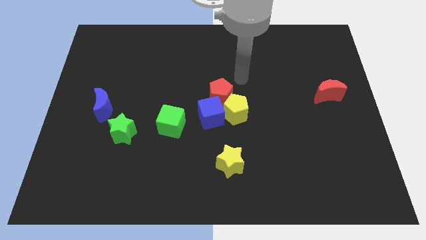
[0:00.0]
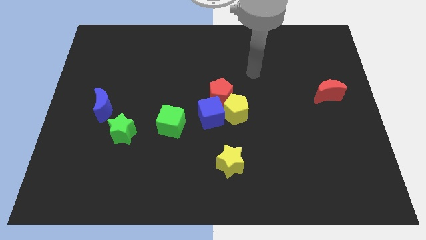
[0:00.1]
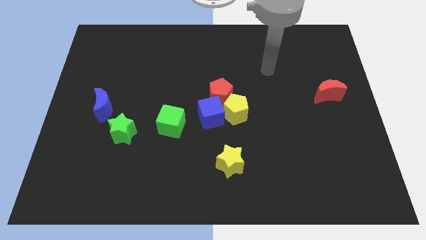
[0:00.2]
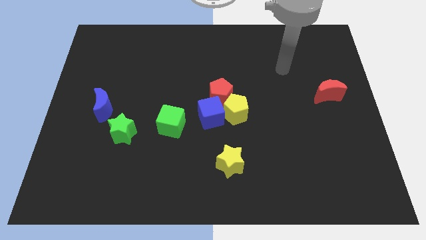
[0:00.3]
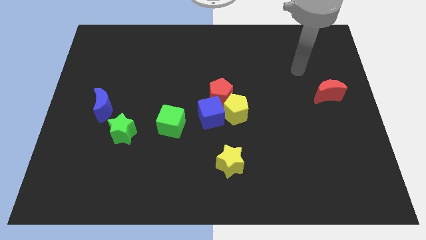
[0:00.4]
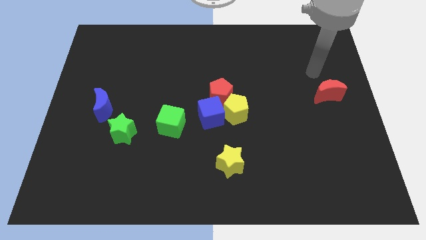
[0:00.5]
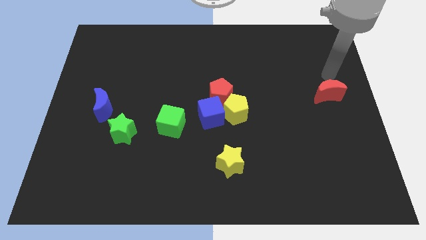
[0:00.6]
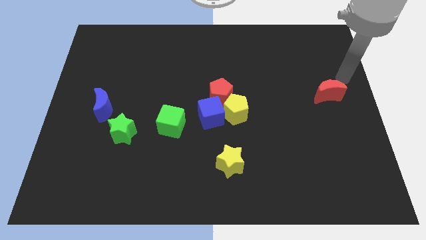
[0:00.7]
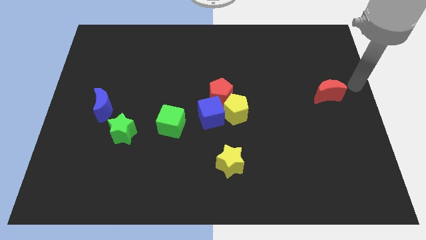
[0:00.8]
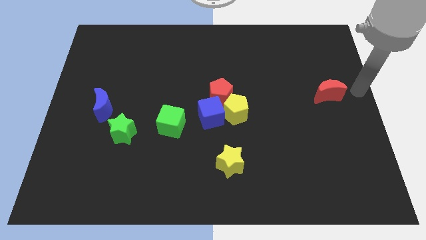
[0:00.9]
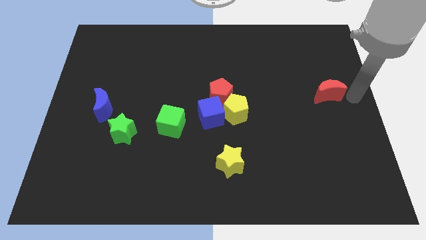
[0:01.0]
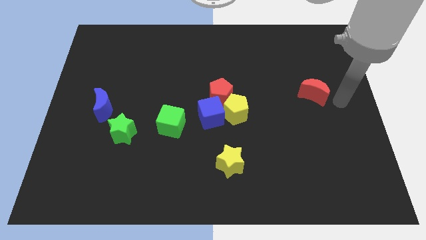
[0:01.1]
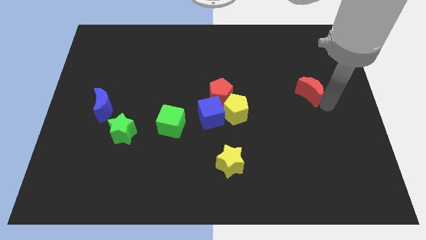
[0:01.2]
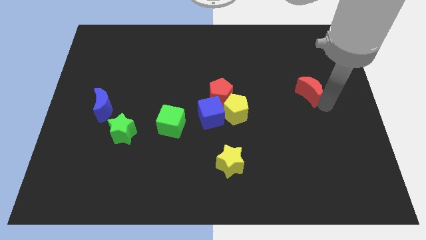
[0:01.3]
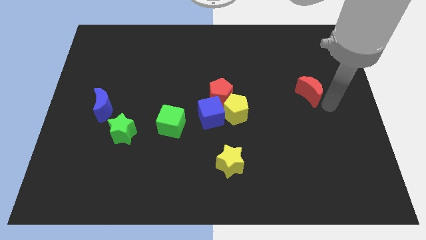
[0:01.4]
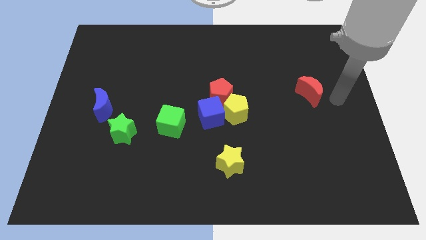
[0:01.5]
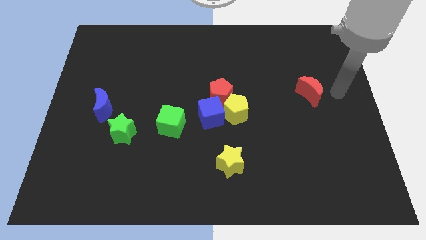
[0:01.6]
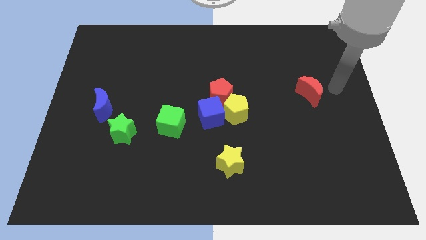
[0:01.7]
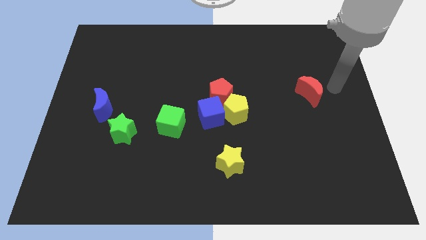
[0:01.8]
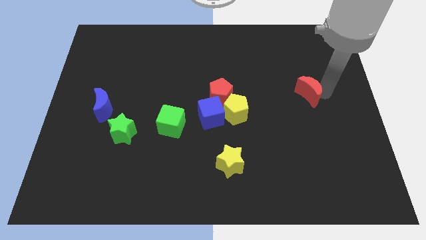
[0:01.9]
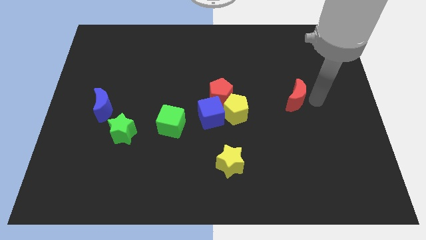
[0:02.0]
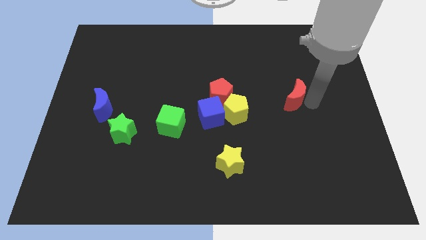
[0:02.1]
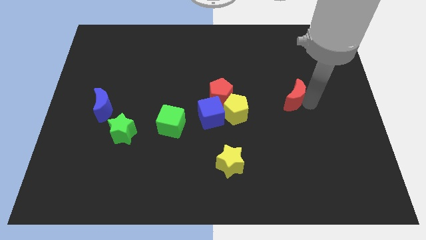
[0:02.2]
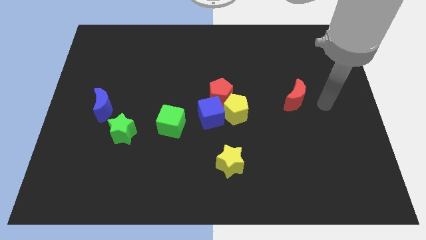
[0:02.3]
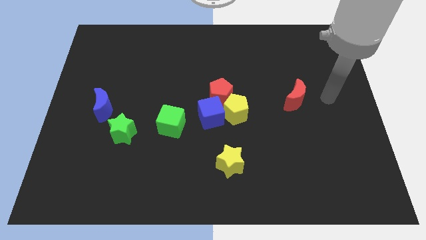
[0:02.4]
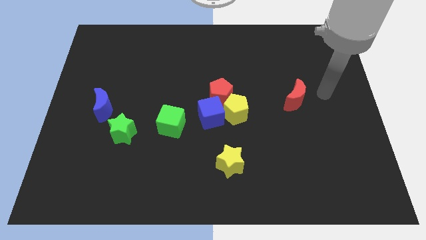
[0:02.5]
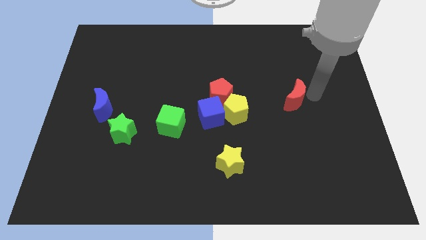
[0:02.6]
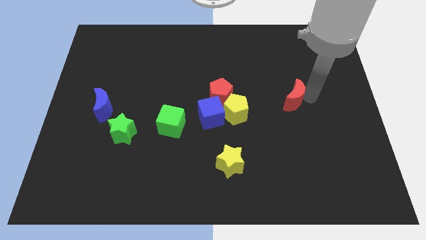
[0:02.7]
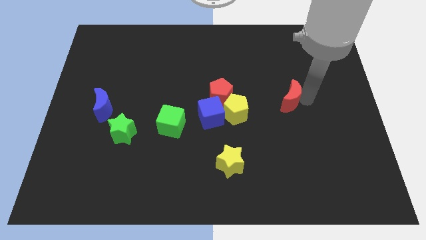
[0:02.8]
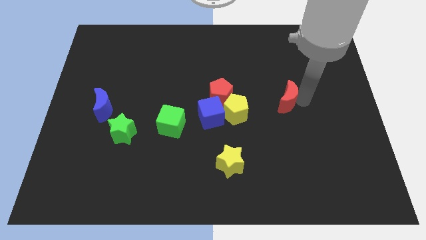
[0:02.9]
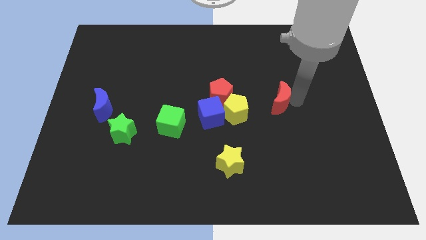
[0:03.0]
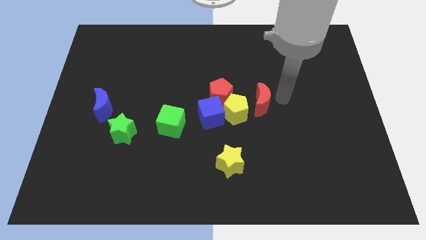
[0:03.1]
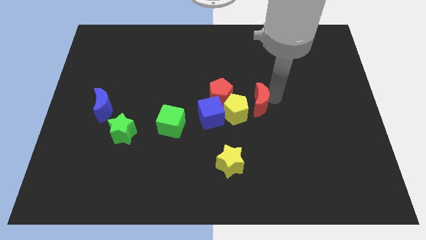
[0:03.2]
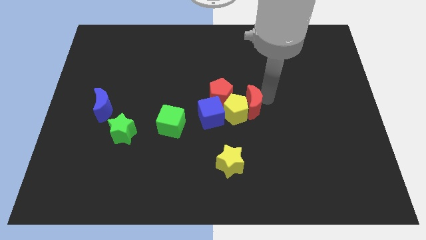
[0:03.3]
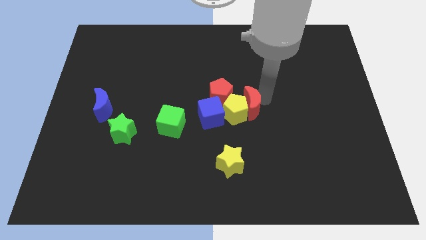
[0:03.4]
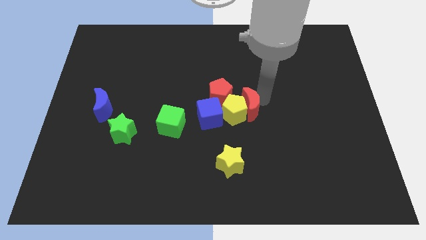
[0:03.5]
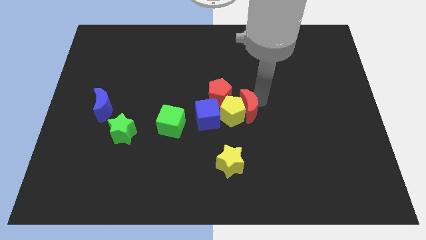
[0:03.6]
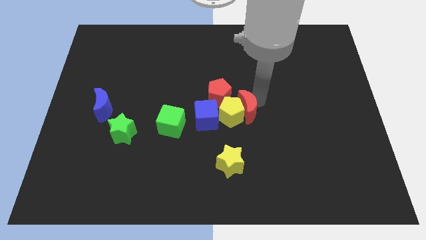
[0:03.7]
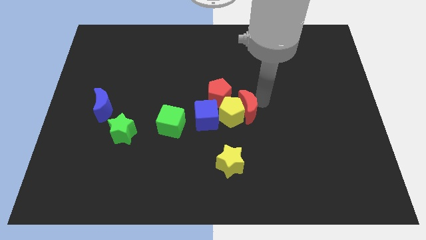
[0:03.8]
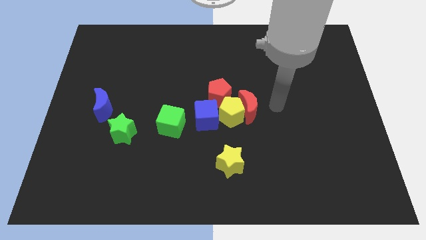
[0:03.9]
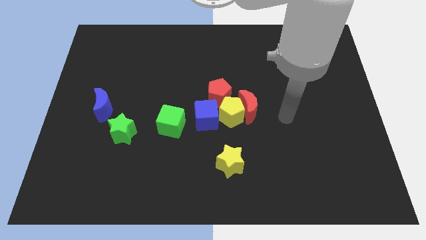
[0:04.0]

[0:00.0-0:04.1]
slide the red crescent to the right side of the yellow pentagon

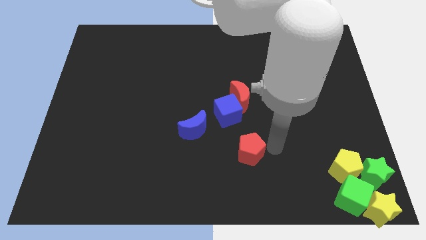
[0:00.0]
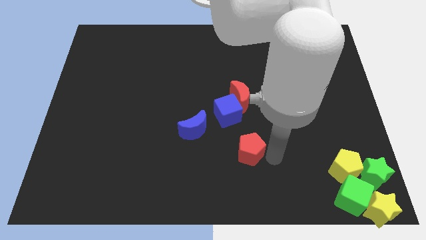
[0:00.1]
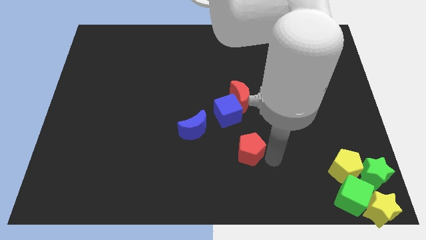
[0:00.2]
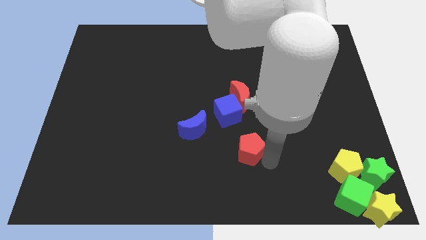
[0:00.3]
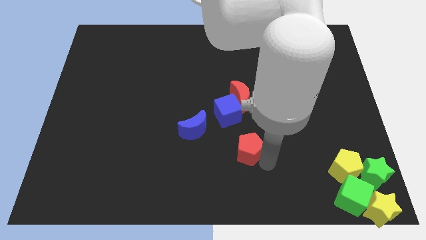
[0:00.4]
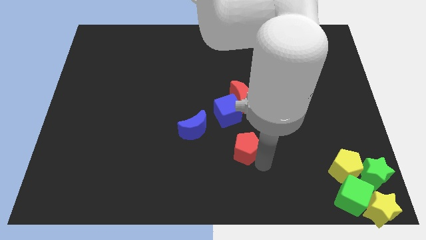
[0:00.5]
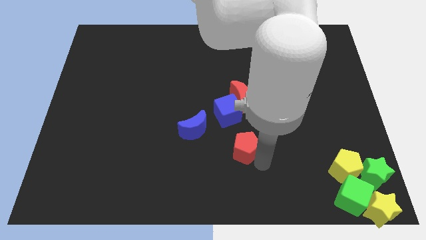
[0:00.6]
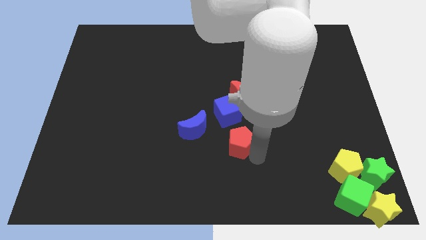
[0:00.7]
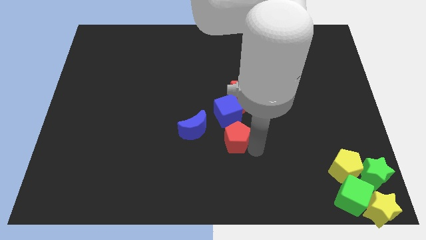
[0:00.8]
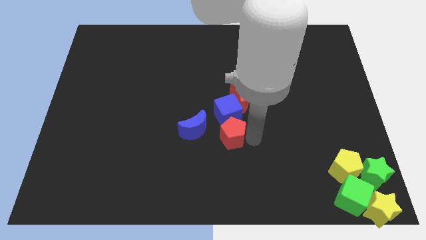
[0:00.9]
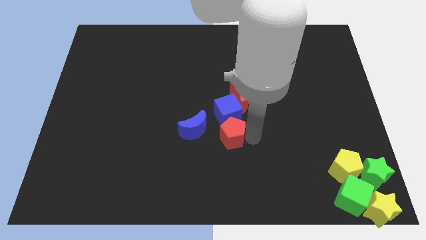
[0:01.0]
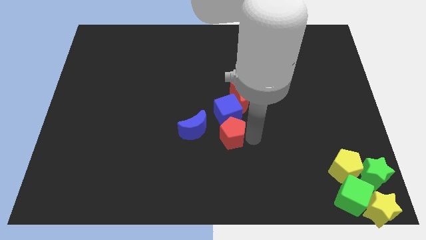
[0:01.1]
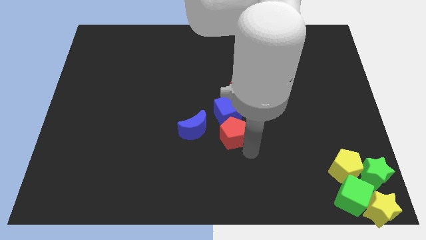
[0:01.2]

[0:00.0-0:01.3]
push the red pentagon to the bottom of the blue cube

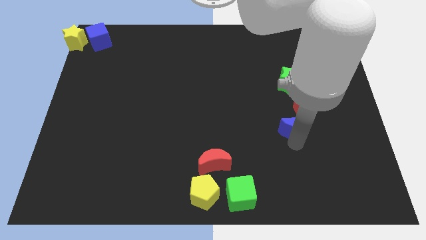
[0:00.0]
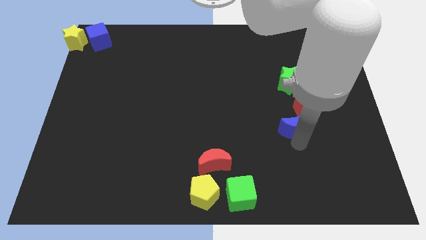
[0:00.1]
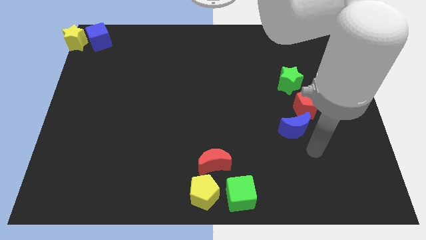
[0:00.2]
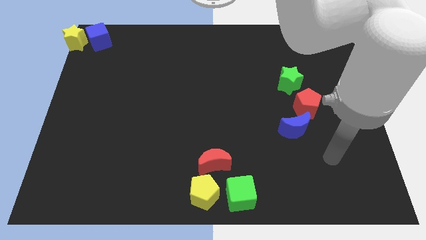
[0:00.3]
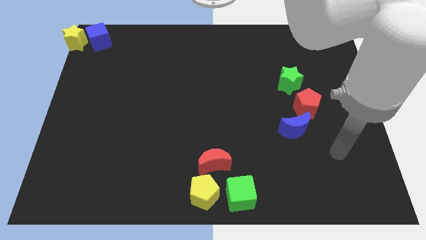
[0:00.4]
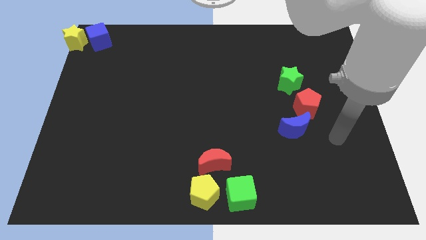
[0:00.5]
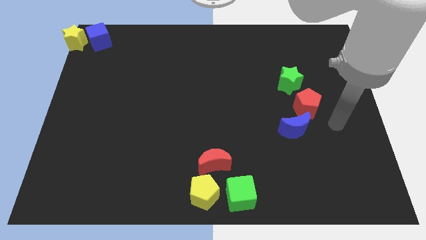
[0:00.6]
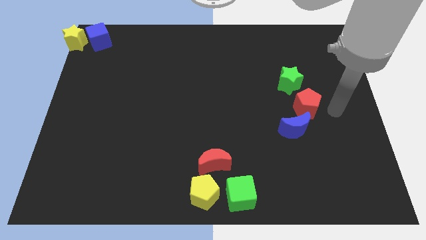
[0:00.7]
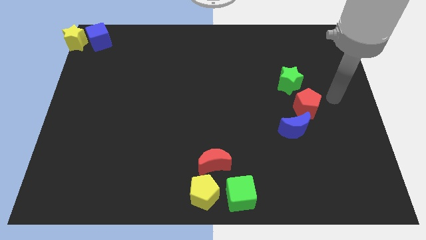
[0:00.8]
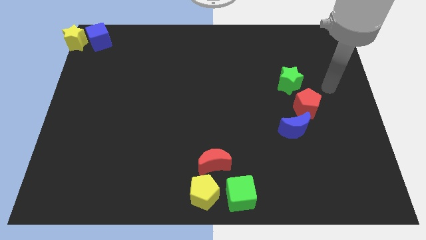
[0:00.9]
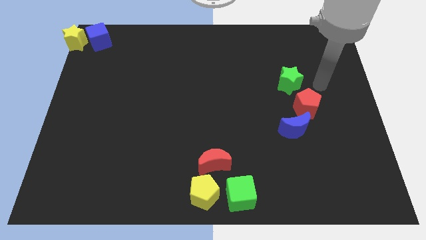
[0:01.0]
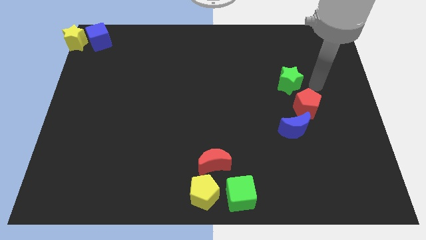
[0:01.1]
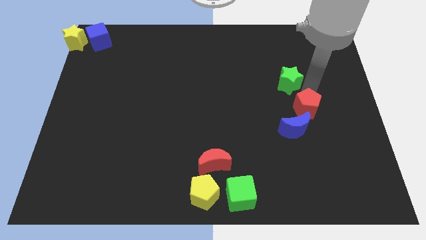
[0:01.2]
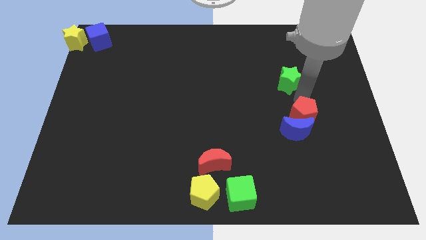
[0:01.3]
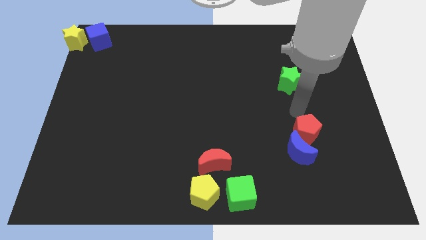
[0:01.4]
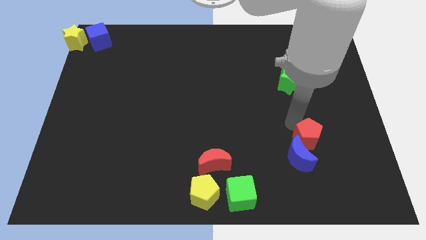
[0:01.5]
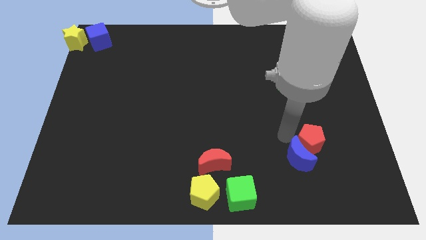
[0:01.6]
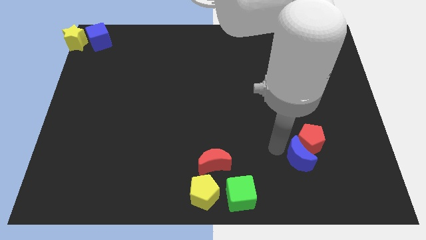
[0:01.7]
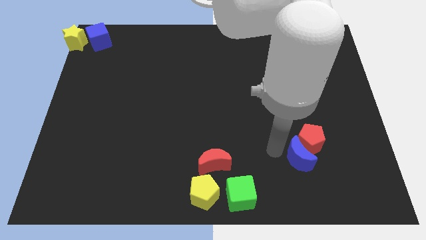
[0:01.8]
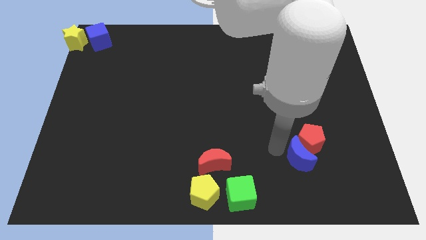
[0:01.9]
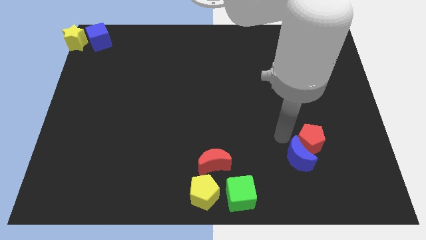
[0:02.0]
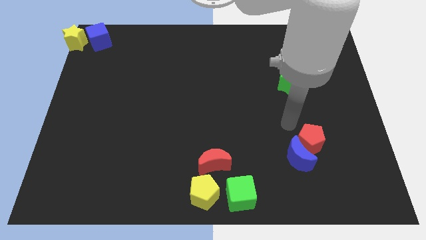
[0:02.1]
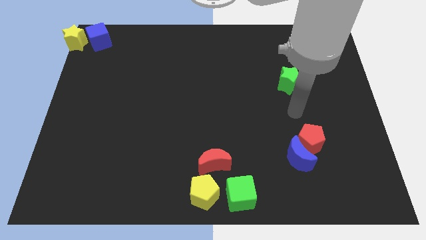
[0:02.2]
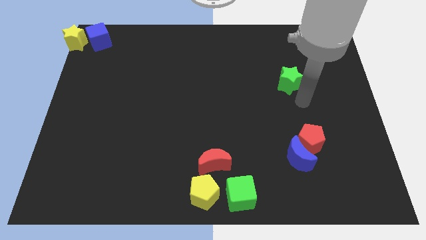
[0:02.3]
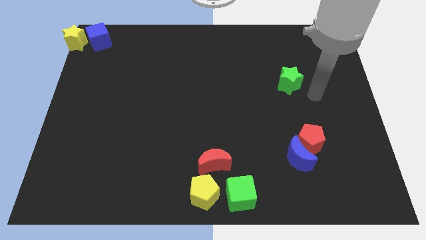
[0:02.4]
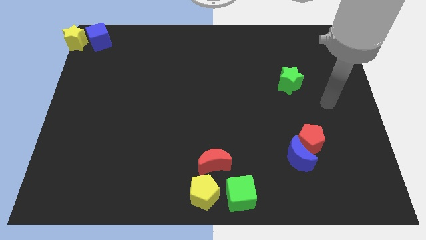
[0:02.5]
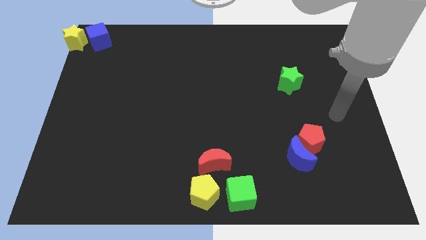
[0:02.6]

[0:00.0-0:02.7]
push the red pentagon into the blue crescent

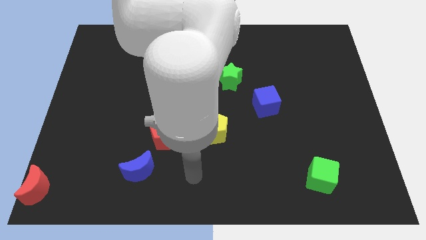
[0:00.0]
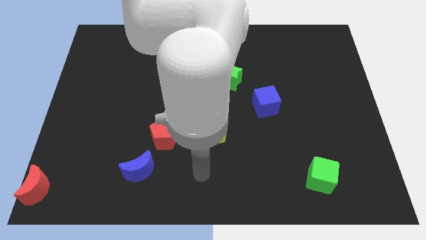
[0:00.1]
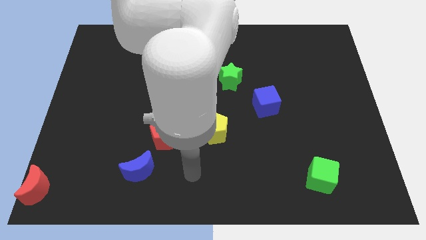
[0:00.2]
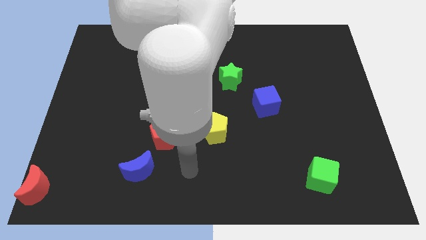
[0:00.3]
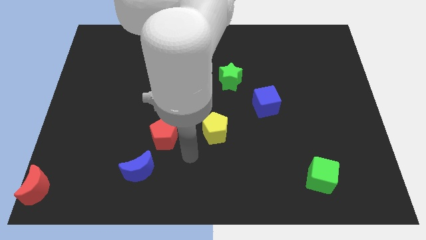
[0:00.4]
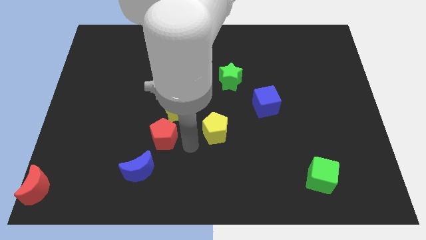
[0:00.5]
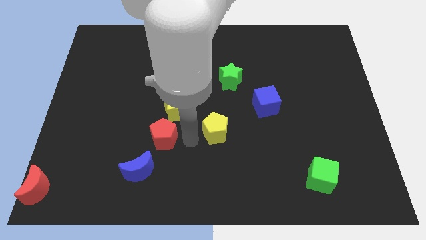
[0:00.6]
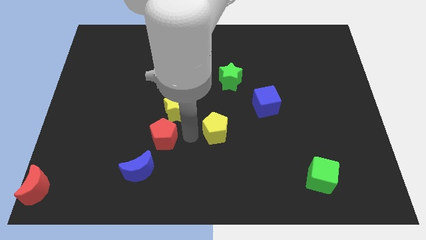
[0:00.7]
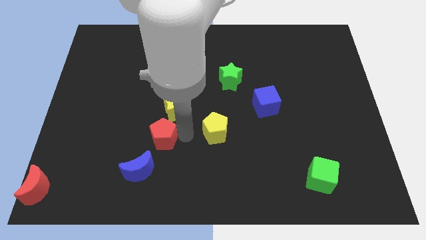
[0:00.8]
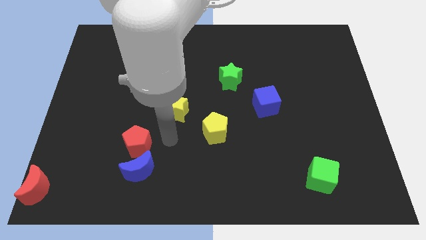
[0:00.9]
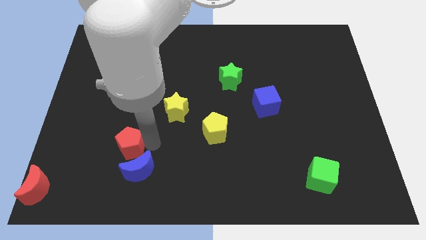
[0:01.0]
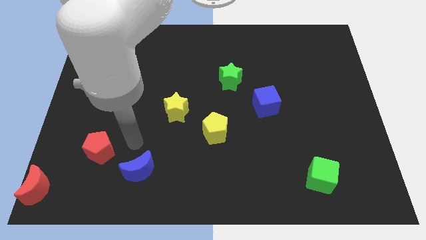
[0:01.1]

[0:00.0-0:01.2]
push the red pentagon diagonally on the top left side of the blue crescent
